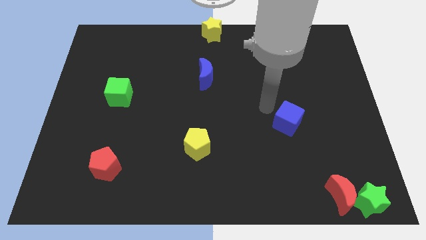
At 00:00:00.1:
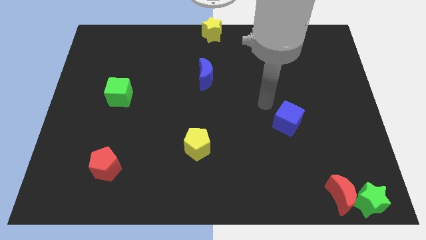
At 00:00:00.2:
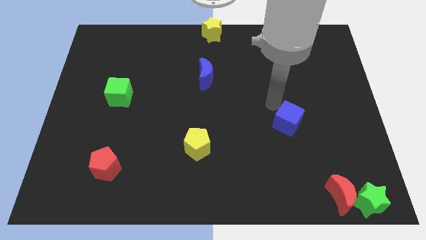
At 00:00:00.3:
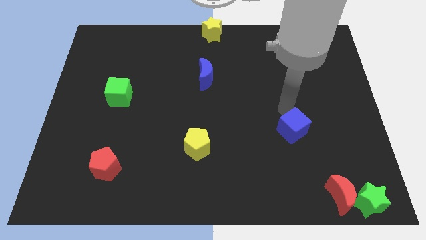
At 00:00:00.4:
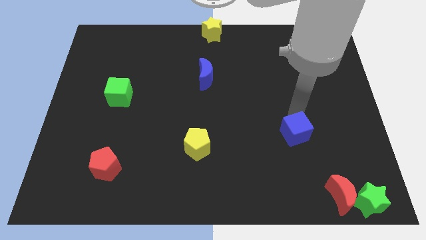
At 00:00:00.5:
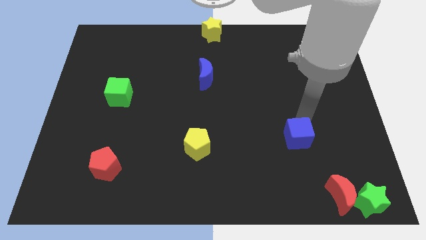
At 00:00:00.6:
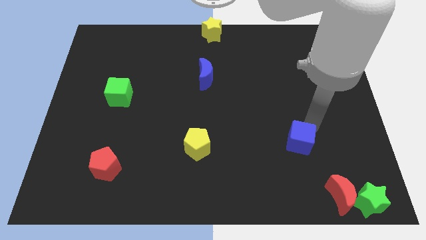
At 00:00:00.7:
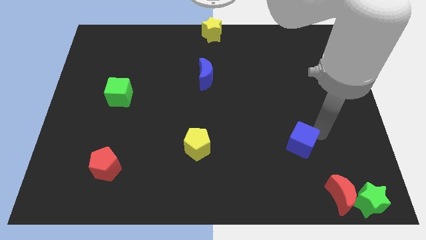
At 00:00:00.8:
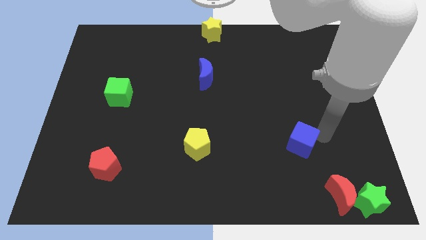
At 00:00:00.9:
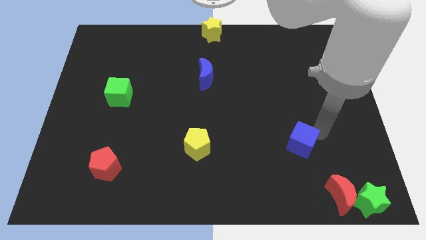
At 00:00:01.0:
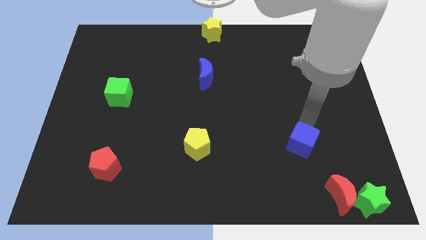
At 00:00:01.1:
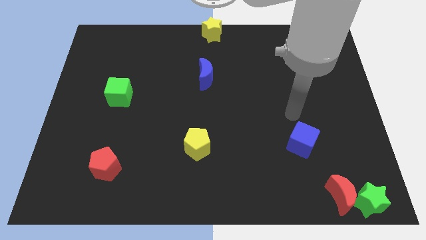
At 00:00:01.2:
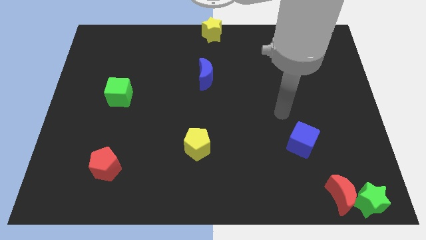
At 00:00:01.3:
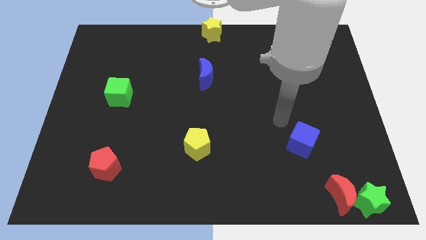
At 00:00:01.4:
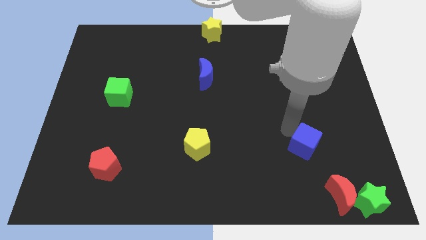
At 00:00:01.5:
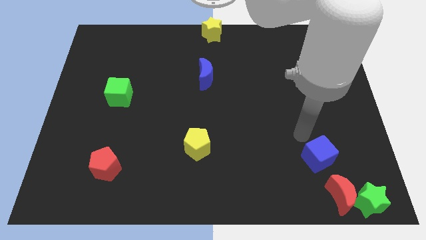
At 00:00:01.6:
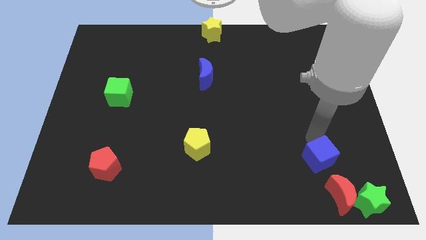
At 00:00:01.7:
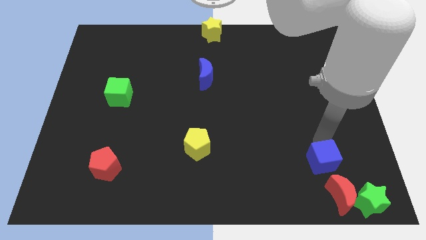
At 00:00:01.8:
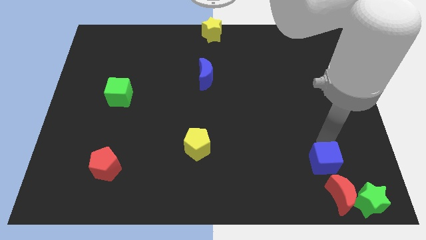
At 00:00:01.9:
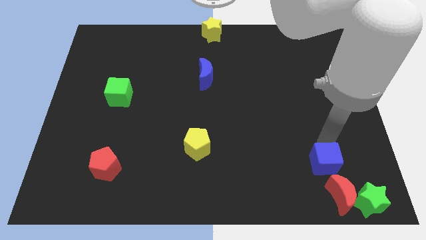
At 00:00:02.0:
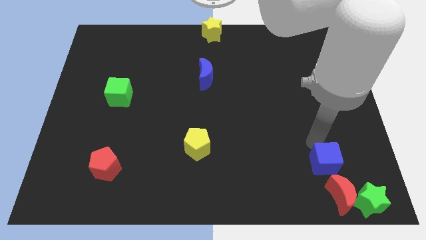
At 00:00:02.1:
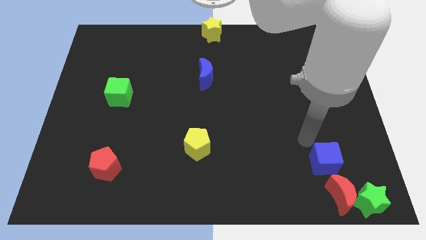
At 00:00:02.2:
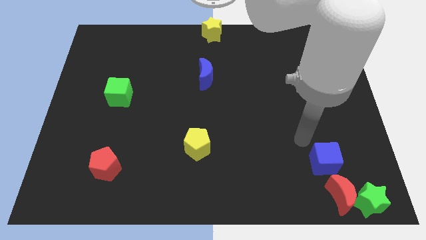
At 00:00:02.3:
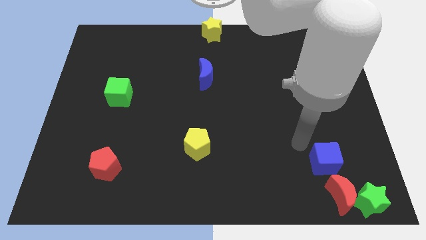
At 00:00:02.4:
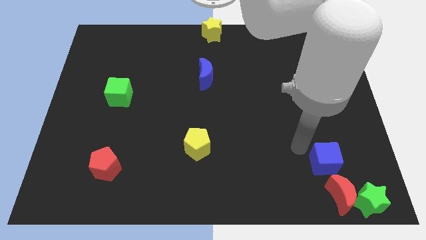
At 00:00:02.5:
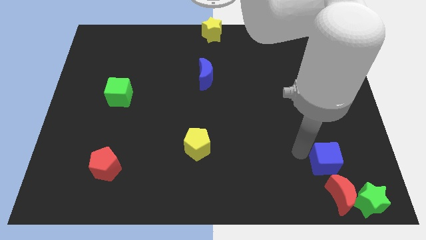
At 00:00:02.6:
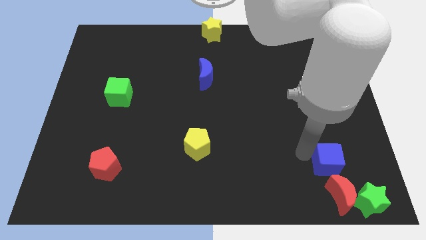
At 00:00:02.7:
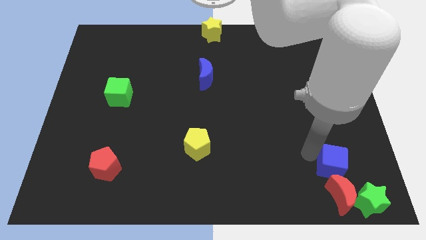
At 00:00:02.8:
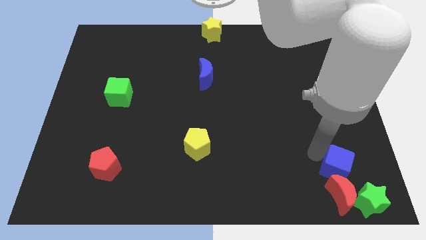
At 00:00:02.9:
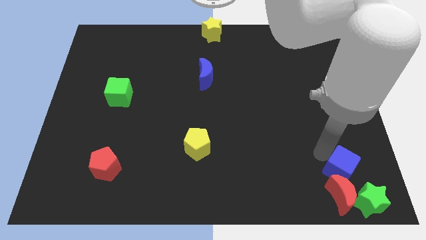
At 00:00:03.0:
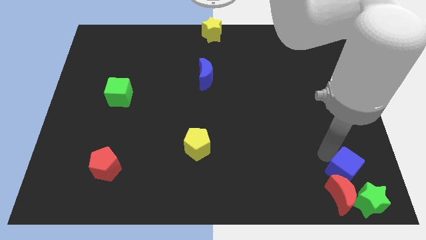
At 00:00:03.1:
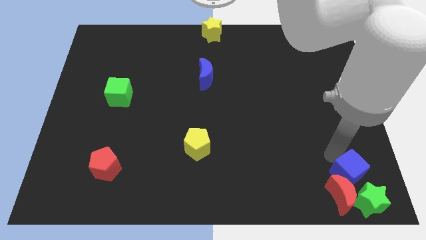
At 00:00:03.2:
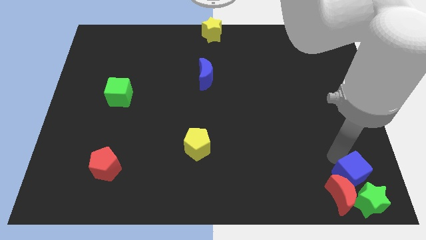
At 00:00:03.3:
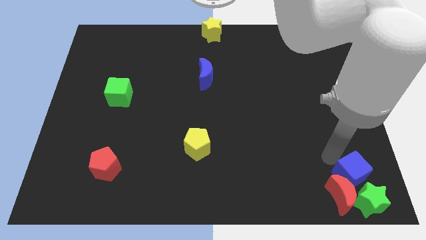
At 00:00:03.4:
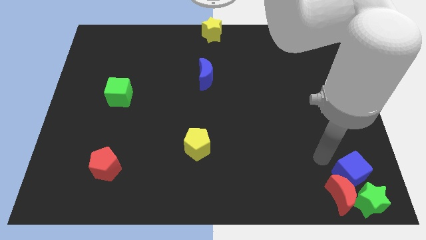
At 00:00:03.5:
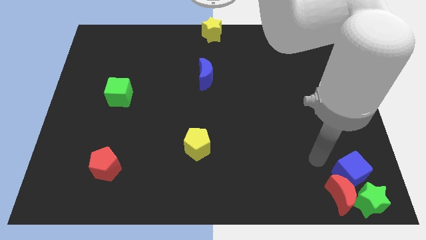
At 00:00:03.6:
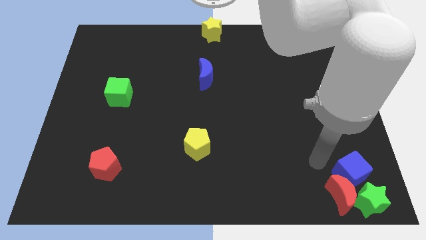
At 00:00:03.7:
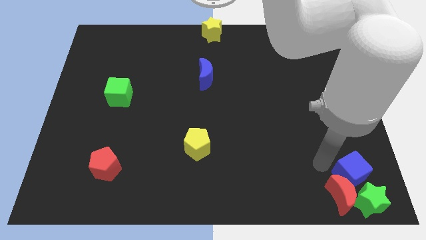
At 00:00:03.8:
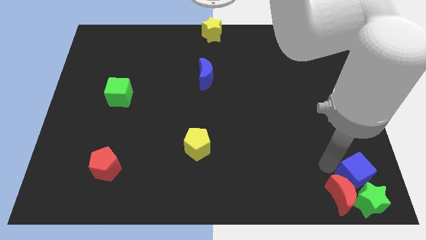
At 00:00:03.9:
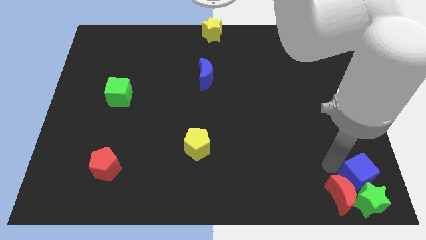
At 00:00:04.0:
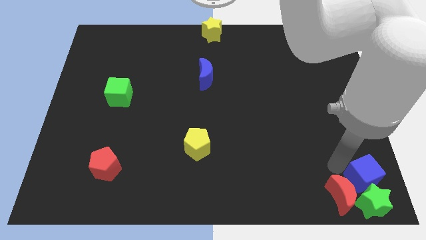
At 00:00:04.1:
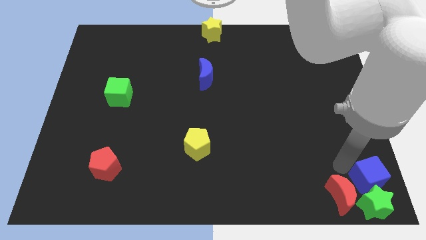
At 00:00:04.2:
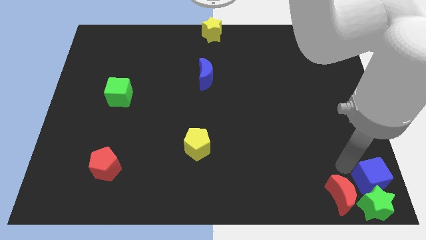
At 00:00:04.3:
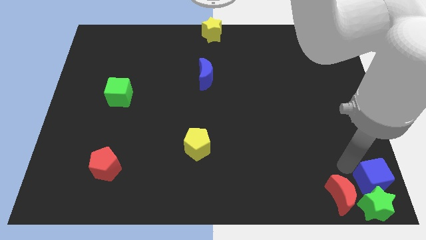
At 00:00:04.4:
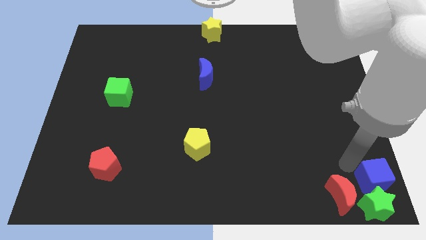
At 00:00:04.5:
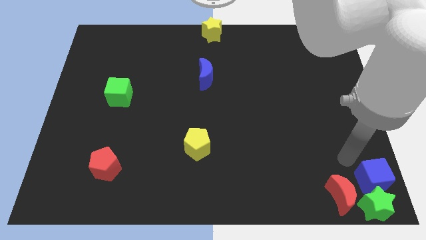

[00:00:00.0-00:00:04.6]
move the blue cube above the green star

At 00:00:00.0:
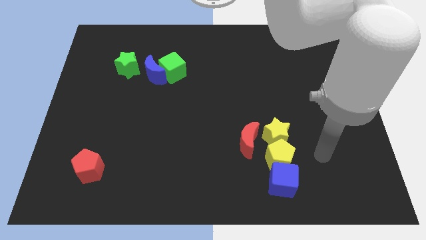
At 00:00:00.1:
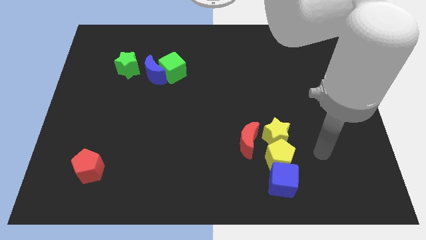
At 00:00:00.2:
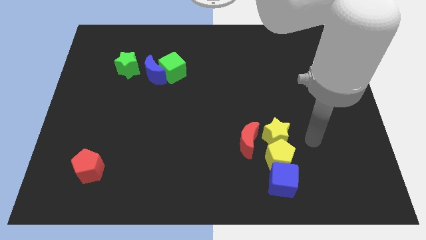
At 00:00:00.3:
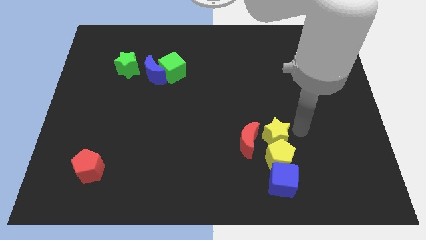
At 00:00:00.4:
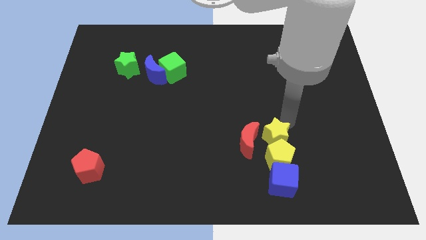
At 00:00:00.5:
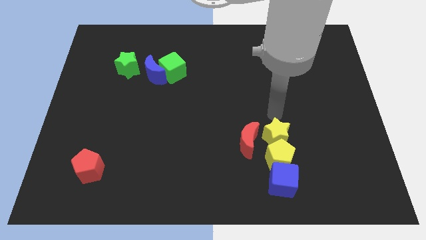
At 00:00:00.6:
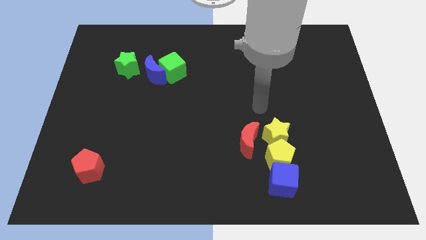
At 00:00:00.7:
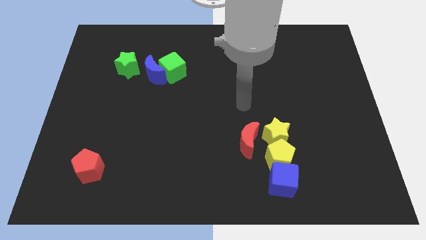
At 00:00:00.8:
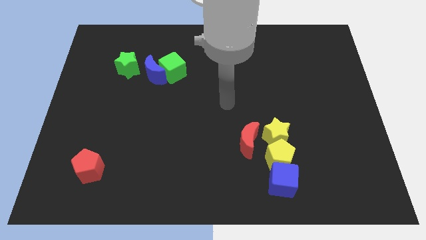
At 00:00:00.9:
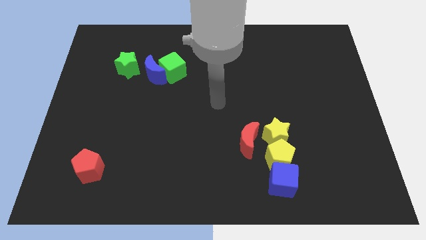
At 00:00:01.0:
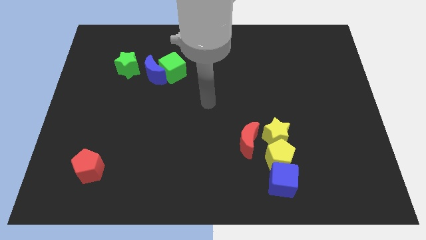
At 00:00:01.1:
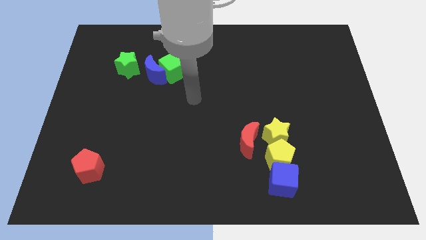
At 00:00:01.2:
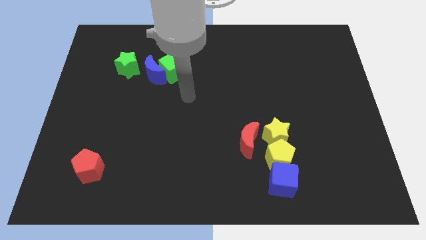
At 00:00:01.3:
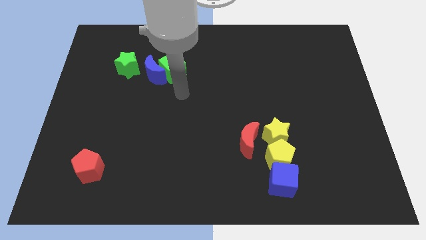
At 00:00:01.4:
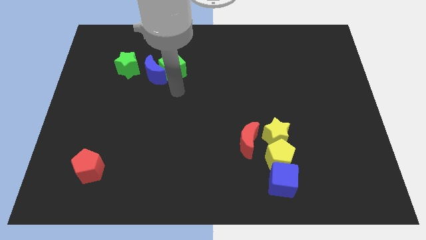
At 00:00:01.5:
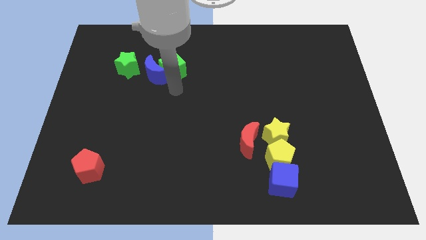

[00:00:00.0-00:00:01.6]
move your arm towards blue crescent

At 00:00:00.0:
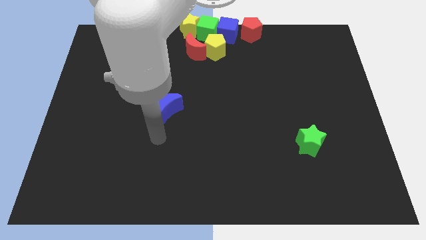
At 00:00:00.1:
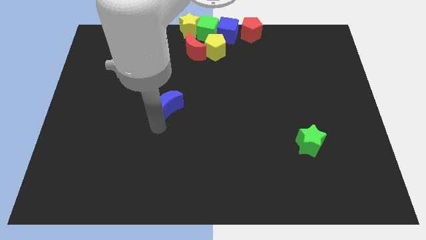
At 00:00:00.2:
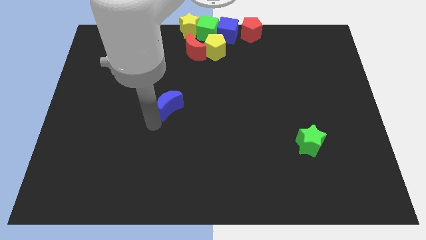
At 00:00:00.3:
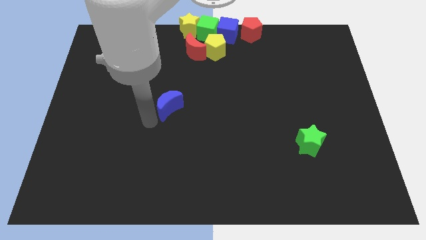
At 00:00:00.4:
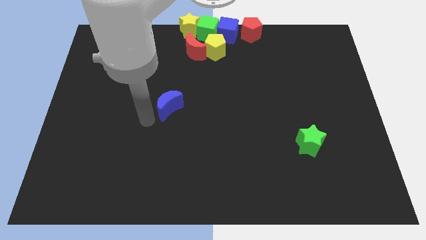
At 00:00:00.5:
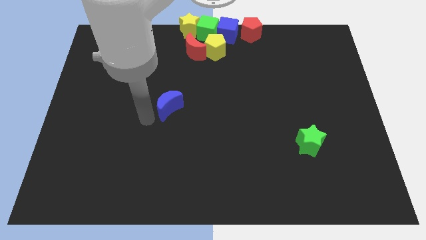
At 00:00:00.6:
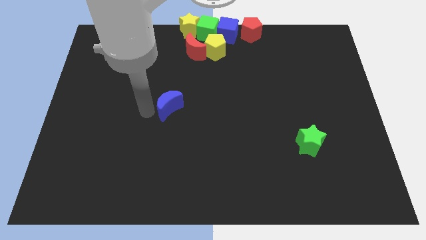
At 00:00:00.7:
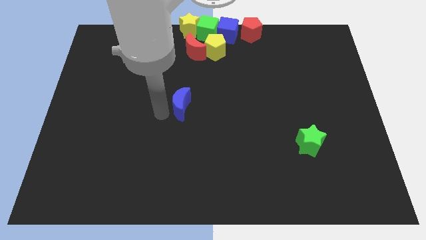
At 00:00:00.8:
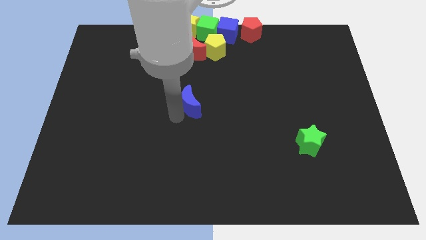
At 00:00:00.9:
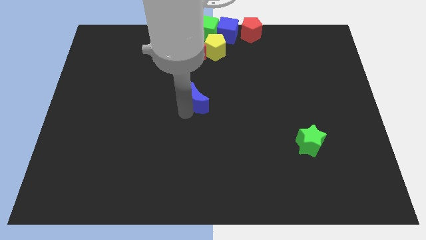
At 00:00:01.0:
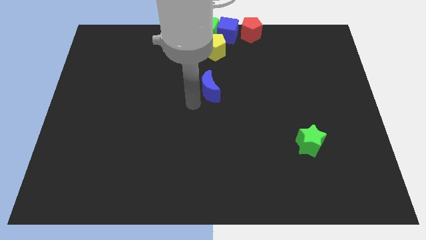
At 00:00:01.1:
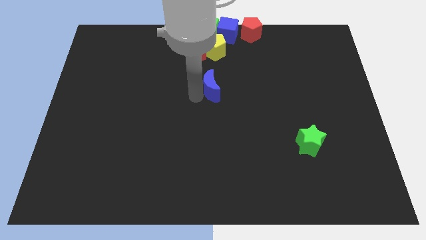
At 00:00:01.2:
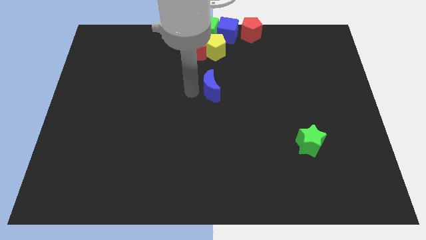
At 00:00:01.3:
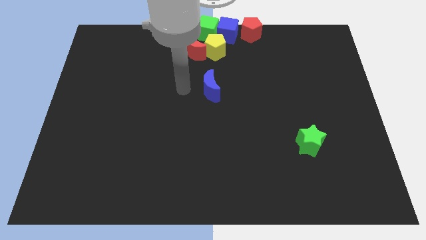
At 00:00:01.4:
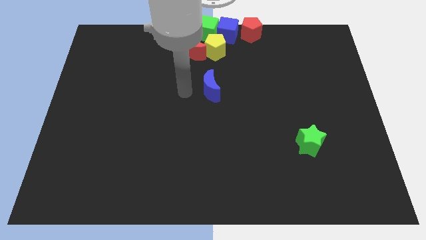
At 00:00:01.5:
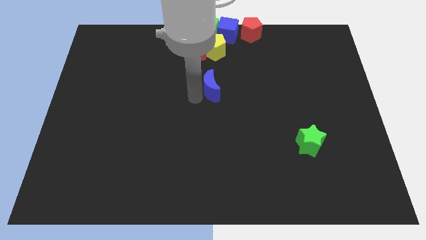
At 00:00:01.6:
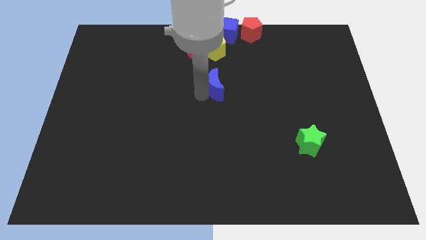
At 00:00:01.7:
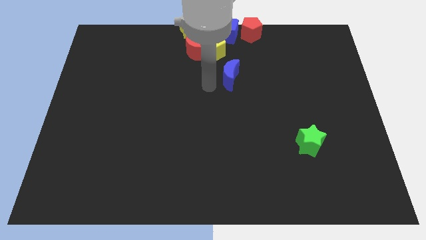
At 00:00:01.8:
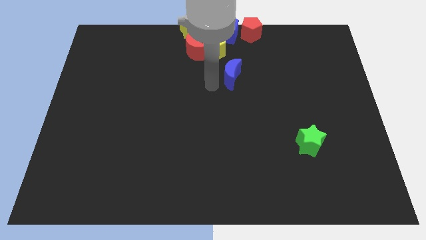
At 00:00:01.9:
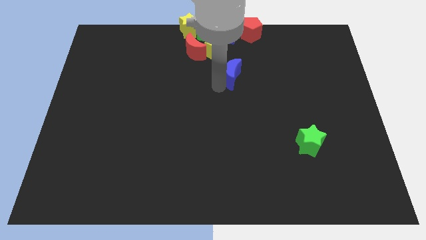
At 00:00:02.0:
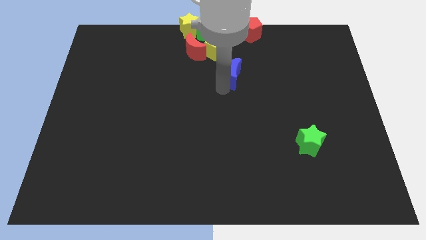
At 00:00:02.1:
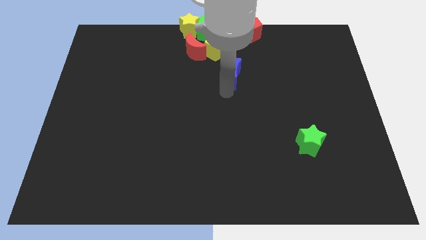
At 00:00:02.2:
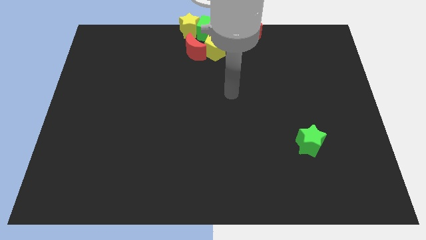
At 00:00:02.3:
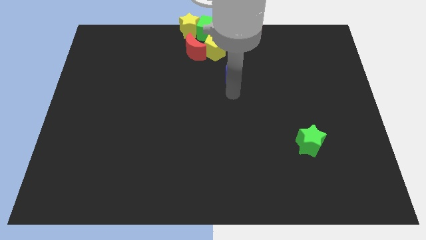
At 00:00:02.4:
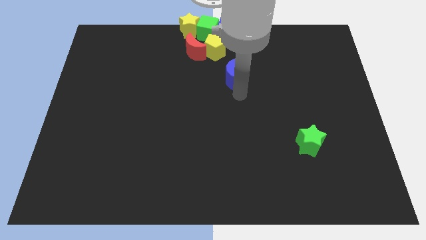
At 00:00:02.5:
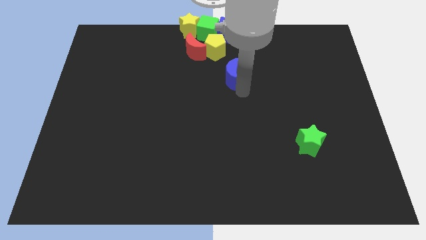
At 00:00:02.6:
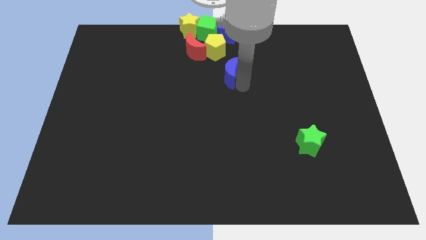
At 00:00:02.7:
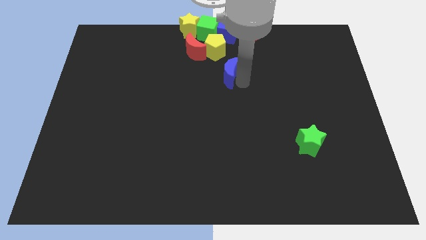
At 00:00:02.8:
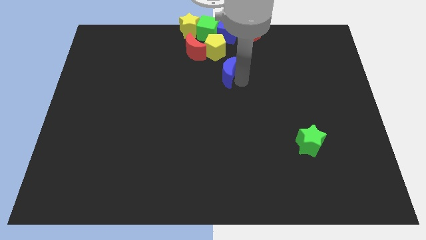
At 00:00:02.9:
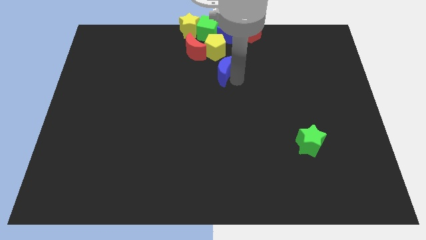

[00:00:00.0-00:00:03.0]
move blue crescent below yellow pentagon
